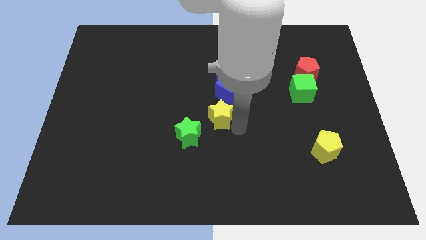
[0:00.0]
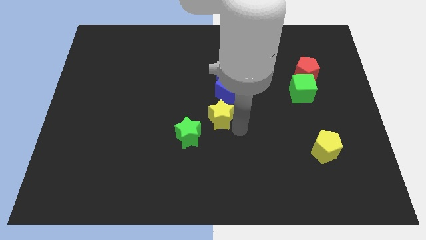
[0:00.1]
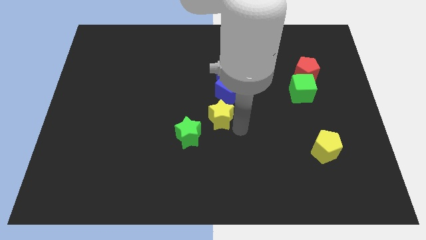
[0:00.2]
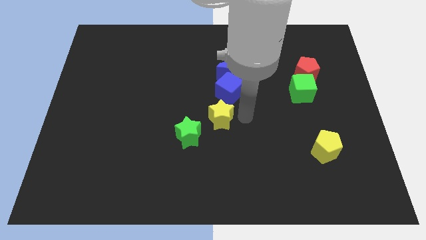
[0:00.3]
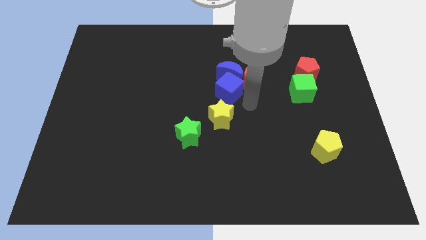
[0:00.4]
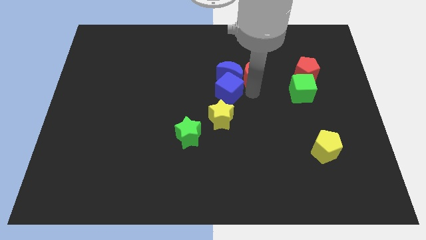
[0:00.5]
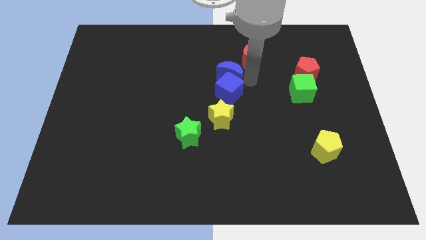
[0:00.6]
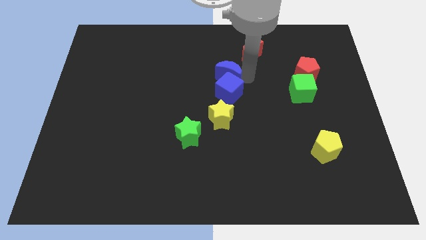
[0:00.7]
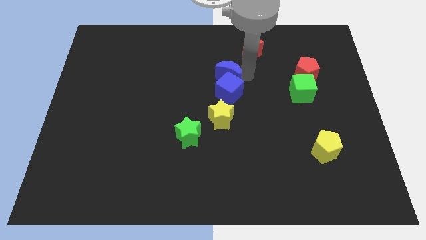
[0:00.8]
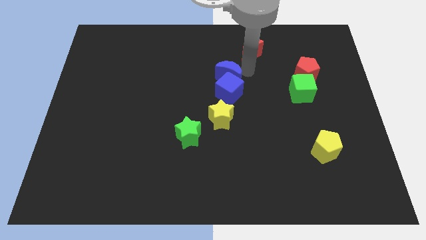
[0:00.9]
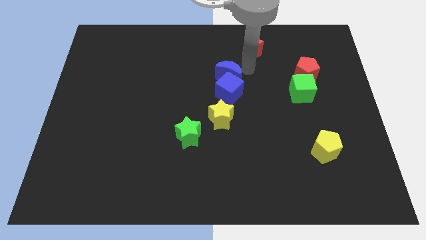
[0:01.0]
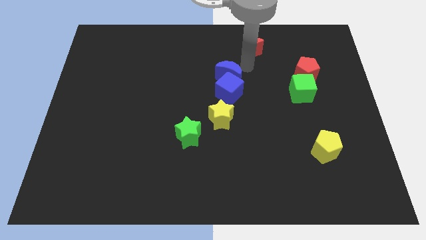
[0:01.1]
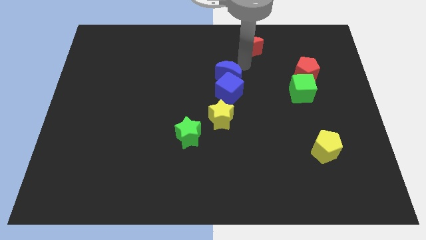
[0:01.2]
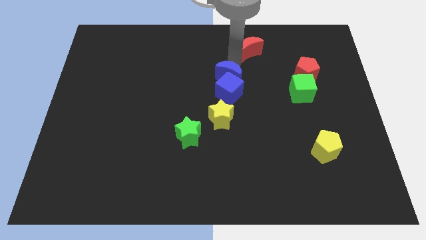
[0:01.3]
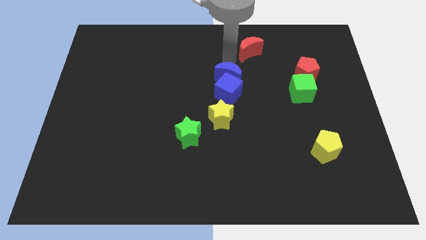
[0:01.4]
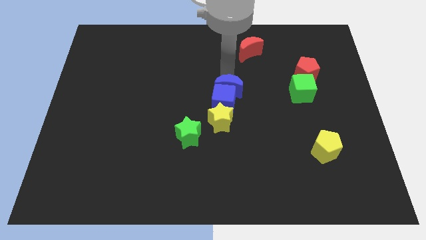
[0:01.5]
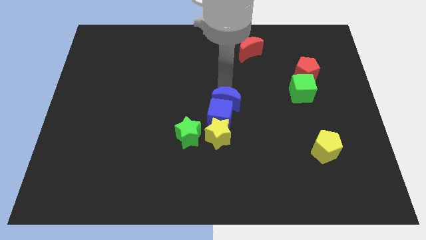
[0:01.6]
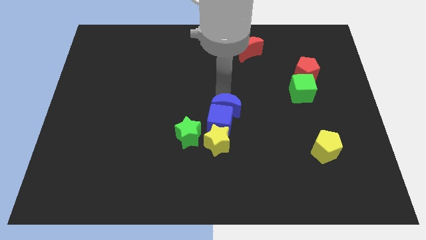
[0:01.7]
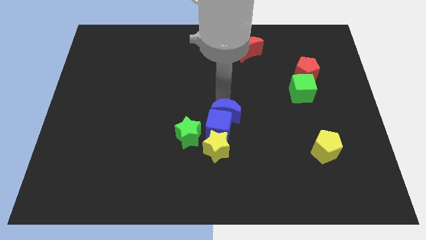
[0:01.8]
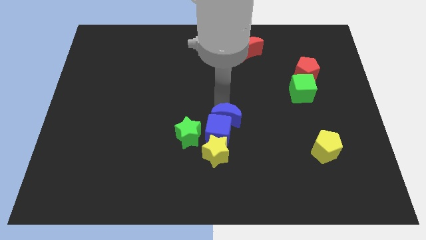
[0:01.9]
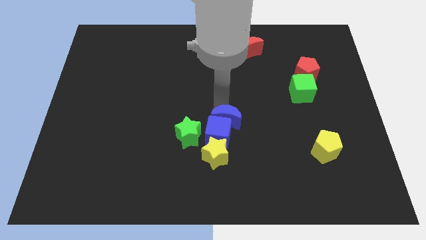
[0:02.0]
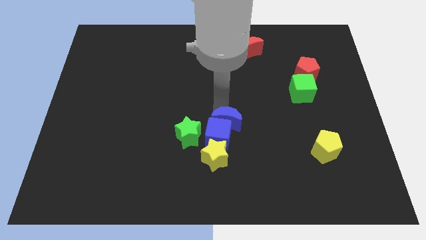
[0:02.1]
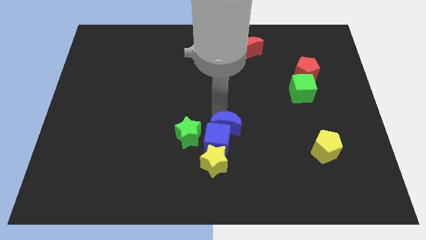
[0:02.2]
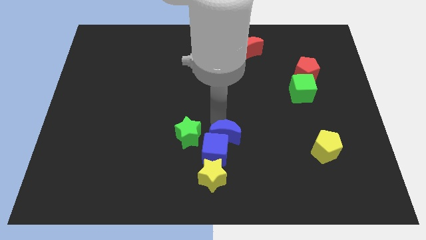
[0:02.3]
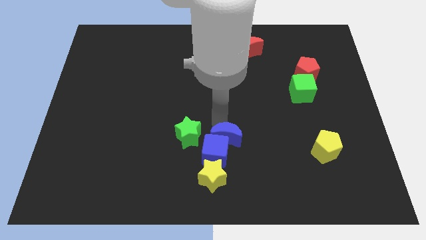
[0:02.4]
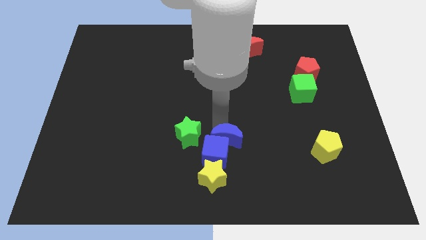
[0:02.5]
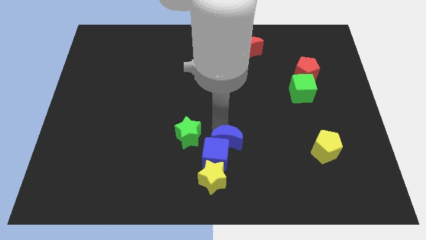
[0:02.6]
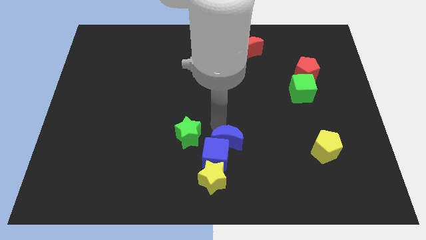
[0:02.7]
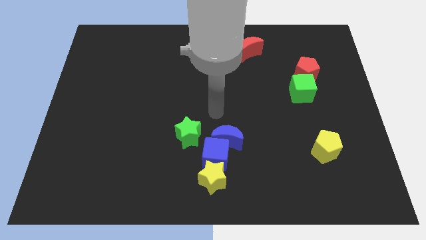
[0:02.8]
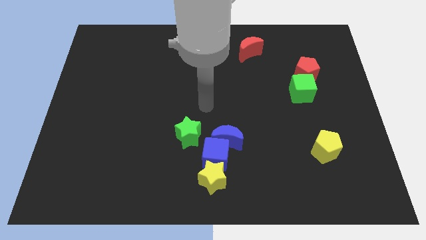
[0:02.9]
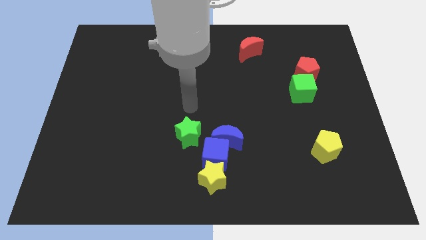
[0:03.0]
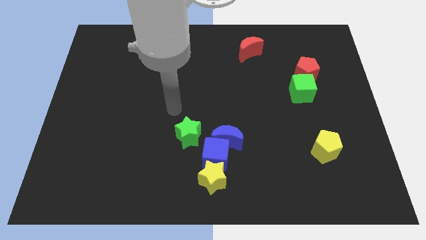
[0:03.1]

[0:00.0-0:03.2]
move the blue semi circle blue cube and yellow star to the bottom side

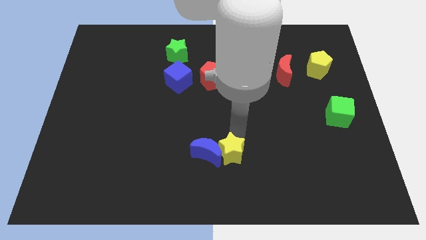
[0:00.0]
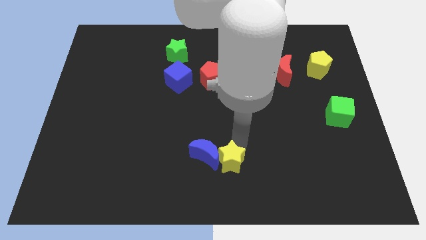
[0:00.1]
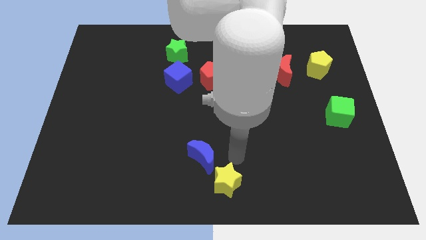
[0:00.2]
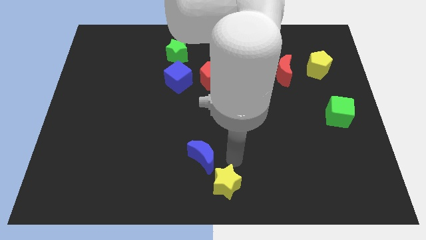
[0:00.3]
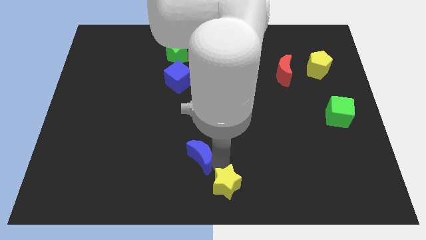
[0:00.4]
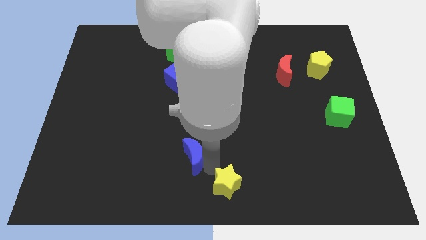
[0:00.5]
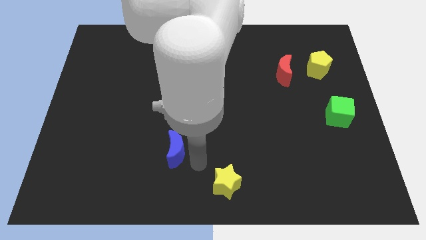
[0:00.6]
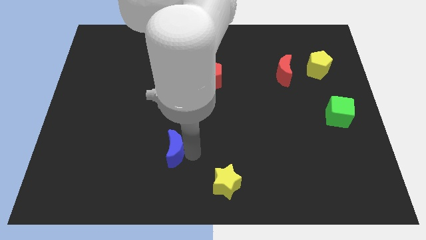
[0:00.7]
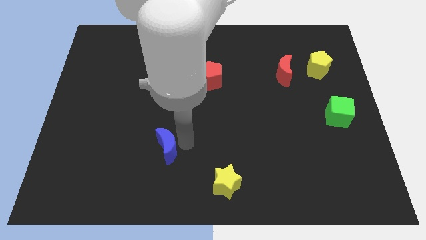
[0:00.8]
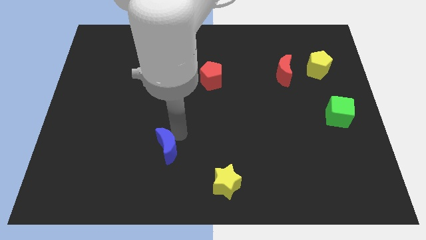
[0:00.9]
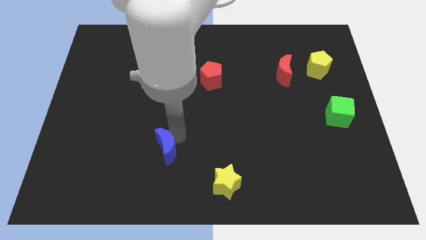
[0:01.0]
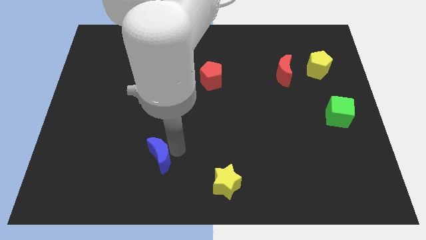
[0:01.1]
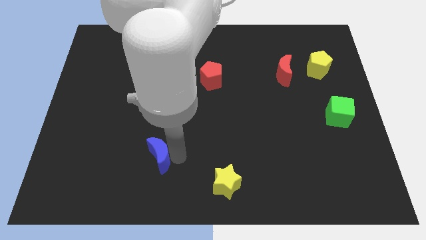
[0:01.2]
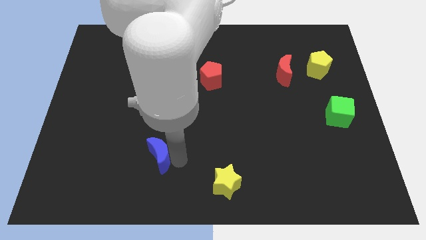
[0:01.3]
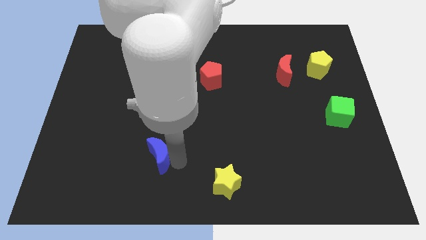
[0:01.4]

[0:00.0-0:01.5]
separate blue moon and yellow star

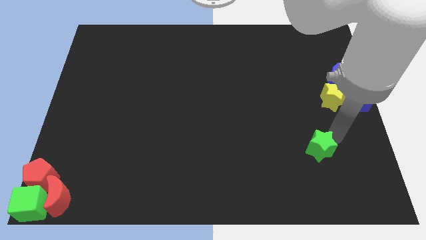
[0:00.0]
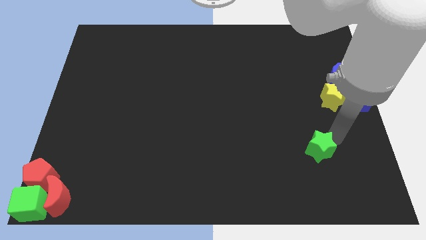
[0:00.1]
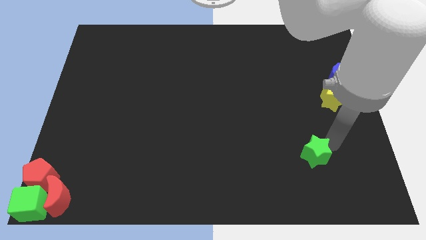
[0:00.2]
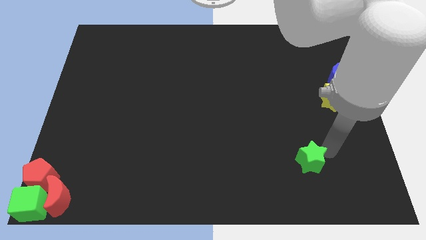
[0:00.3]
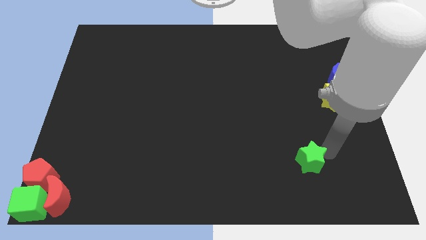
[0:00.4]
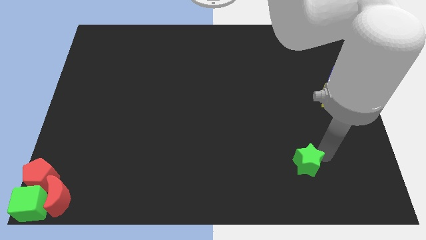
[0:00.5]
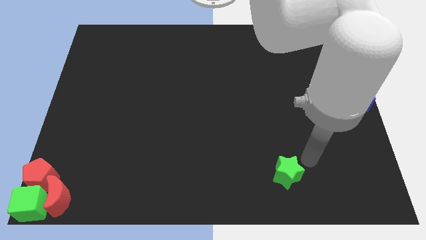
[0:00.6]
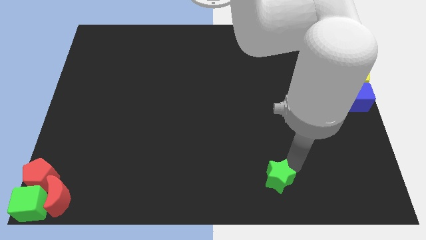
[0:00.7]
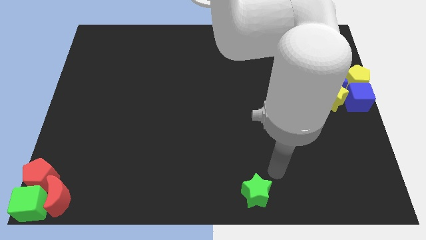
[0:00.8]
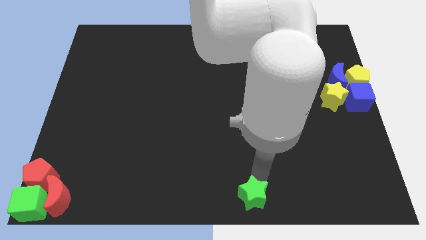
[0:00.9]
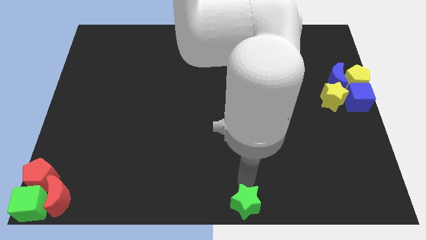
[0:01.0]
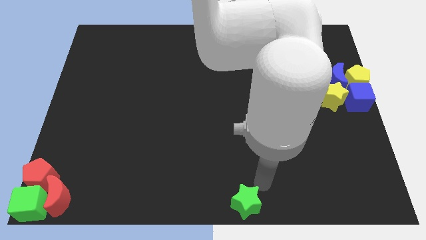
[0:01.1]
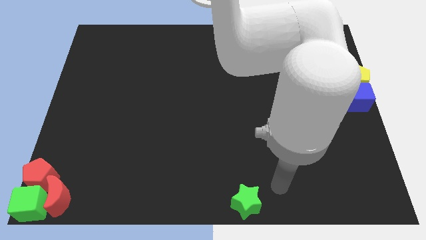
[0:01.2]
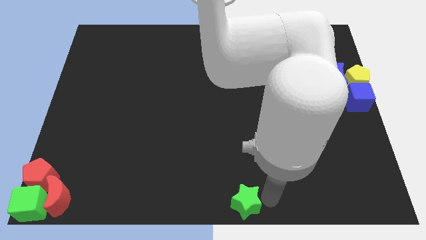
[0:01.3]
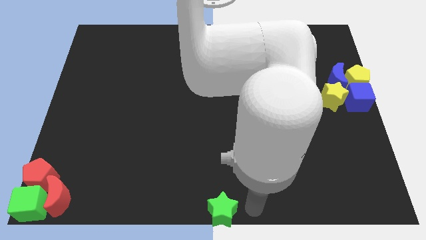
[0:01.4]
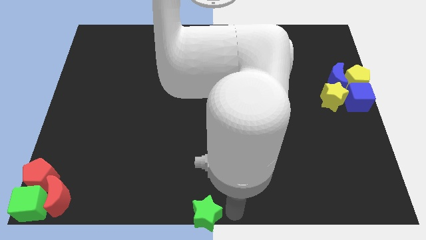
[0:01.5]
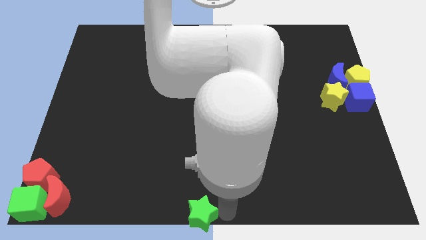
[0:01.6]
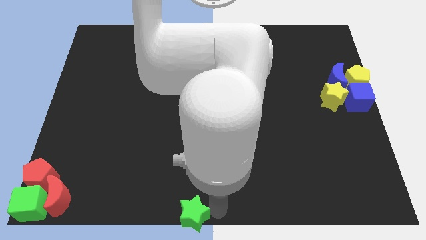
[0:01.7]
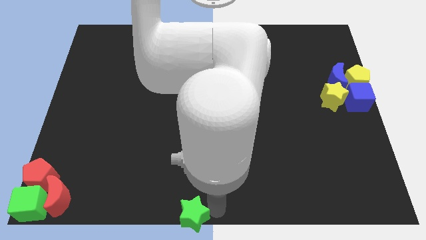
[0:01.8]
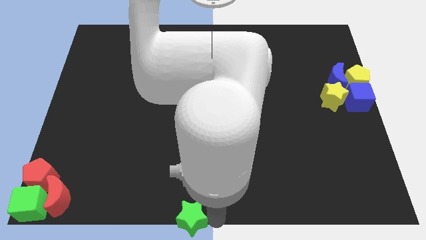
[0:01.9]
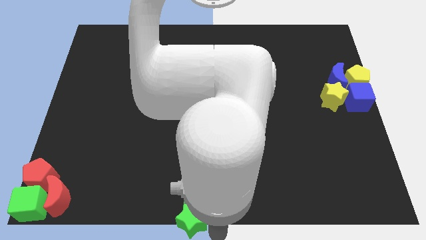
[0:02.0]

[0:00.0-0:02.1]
push the green star at the bottom center

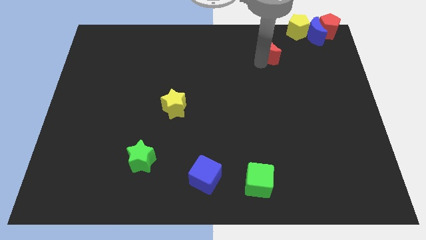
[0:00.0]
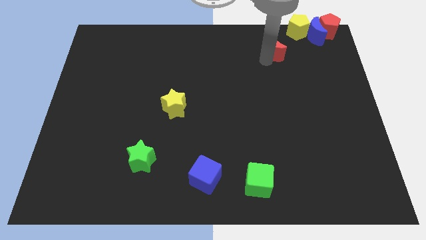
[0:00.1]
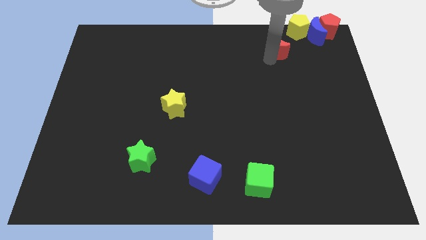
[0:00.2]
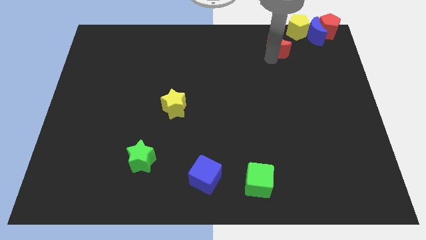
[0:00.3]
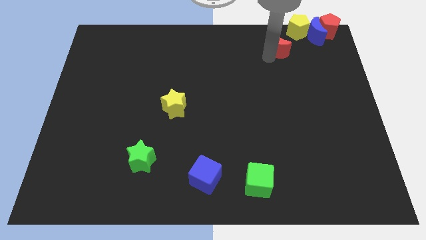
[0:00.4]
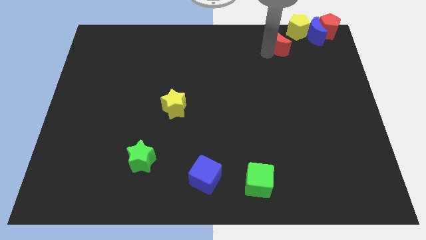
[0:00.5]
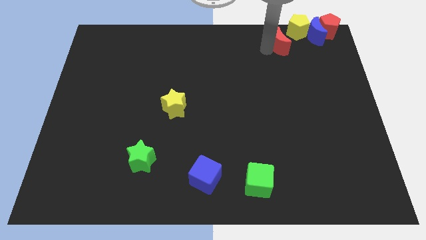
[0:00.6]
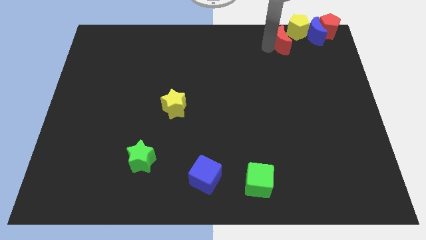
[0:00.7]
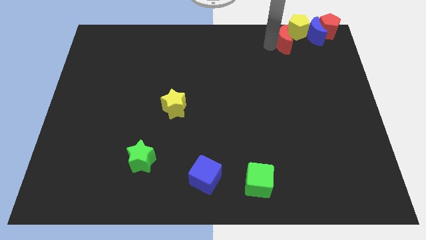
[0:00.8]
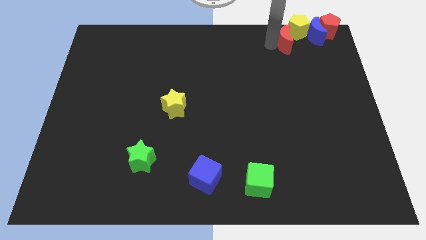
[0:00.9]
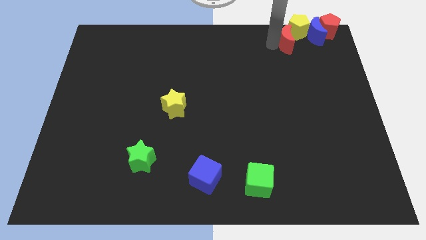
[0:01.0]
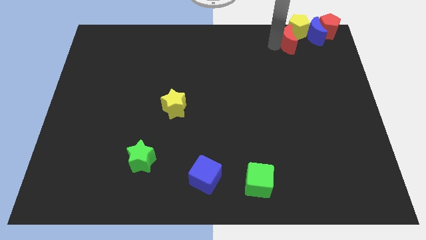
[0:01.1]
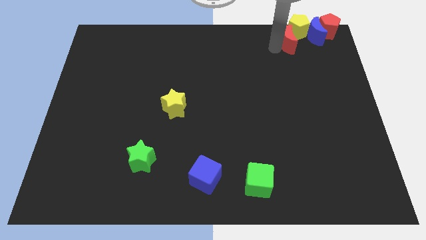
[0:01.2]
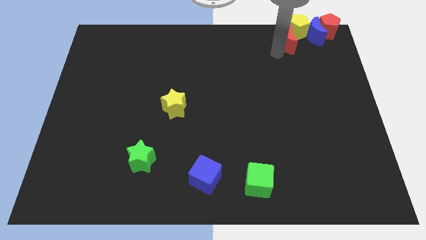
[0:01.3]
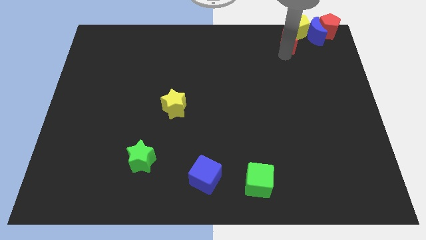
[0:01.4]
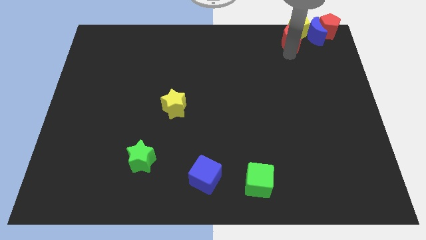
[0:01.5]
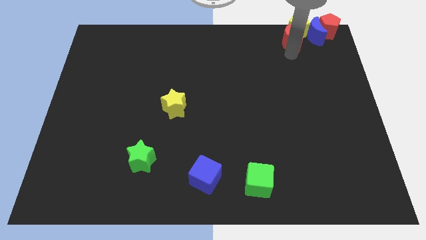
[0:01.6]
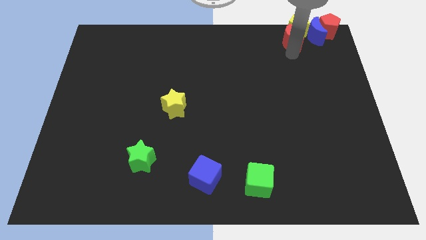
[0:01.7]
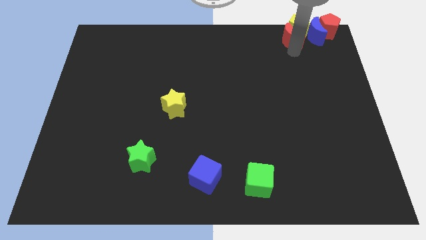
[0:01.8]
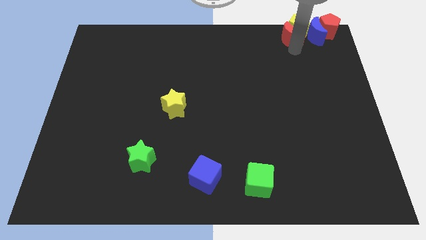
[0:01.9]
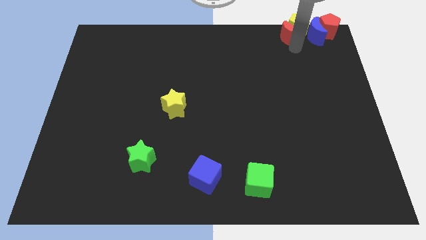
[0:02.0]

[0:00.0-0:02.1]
move red moon into yellow pentagon
